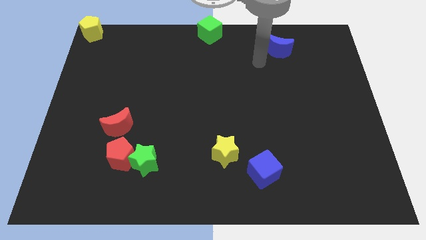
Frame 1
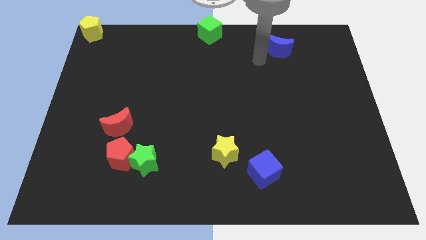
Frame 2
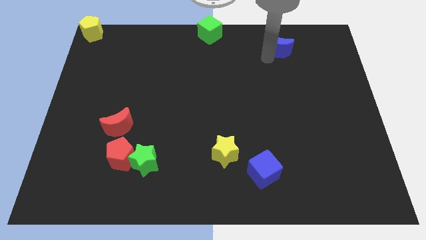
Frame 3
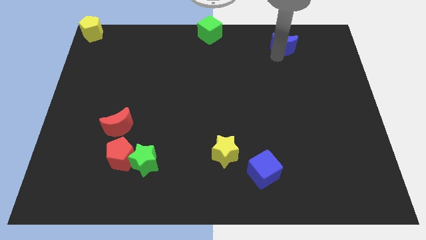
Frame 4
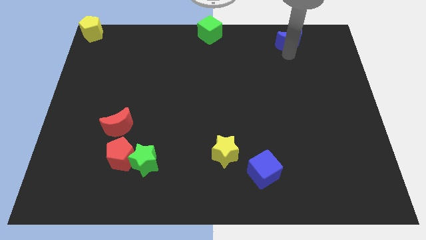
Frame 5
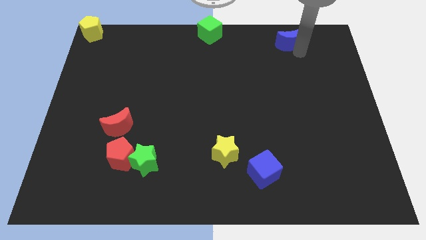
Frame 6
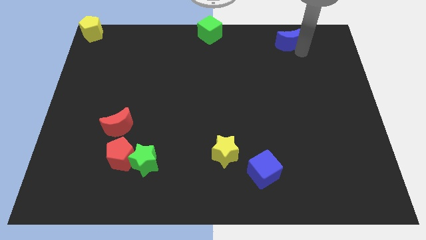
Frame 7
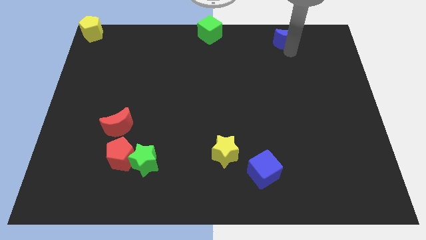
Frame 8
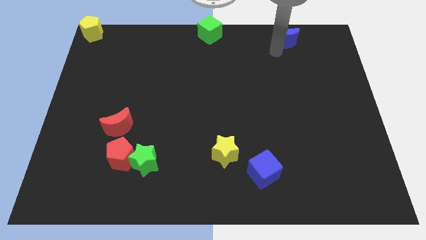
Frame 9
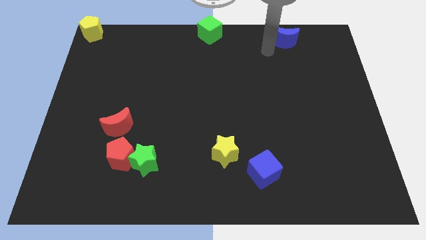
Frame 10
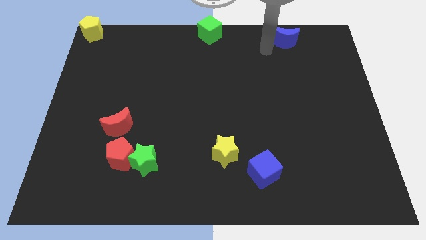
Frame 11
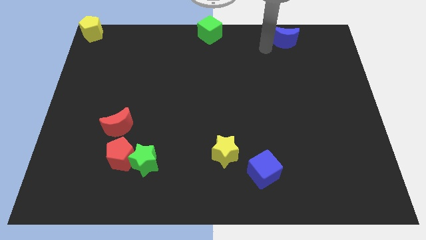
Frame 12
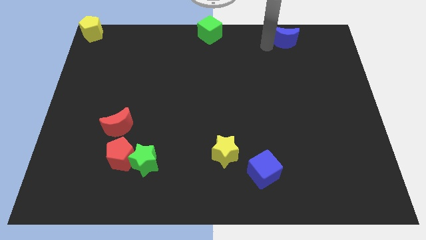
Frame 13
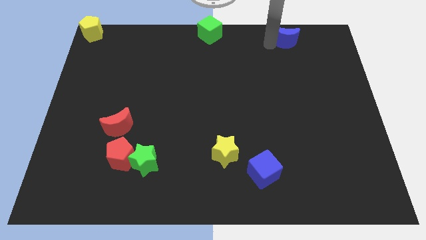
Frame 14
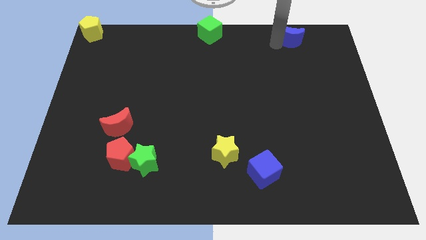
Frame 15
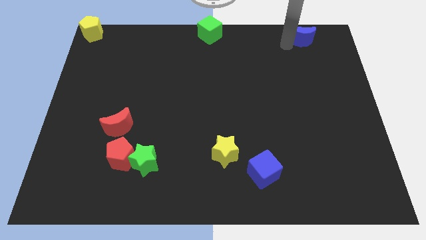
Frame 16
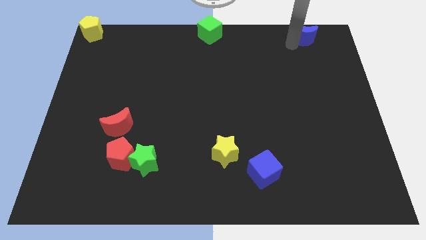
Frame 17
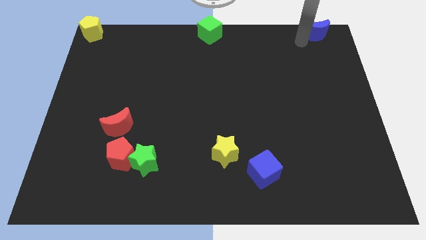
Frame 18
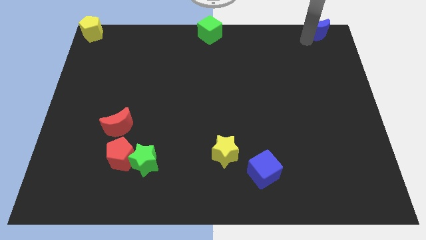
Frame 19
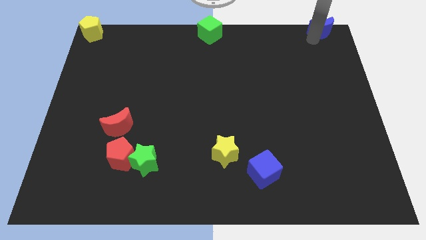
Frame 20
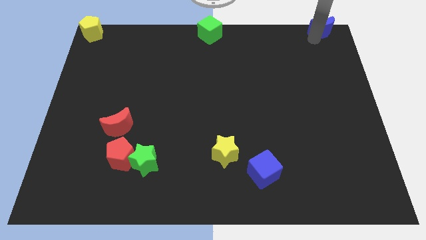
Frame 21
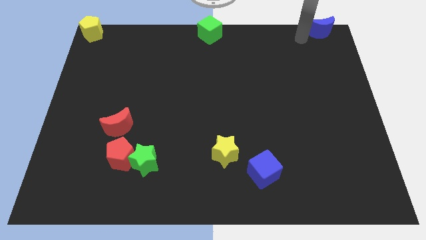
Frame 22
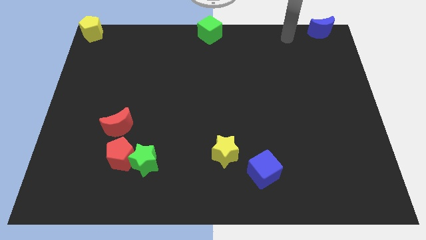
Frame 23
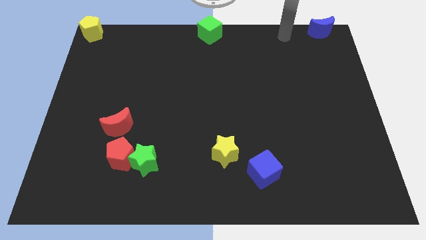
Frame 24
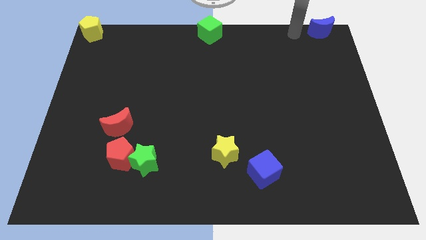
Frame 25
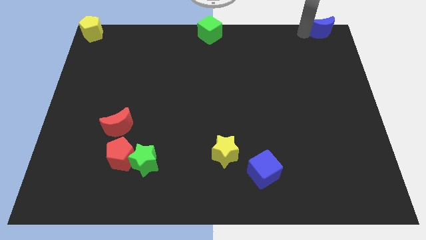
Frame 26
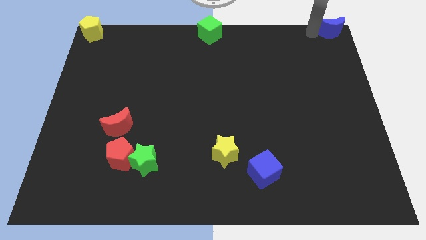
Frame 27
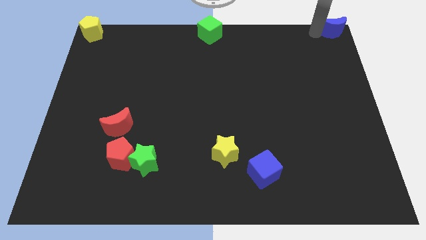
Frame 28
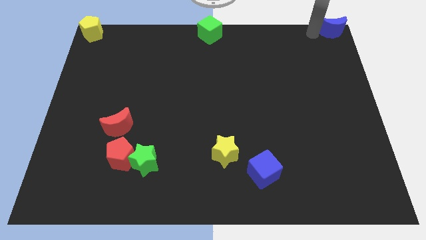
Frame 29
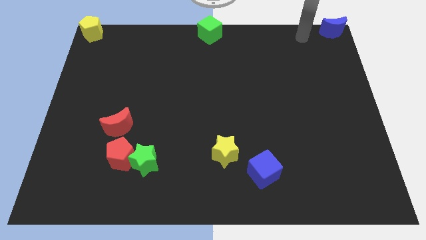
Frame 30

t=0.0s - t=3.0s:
push the blue moon to the top right corner

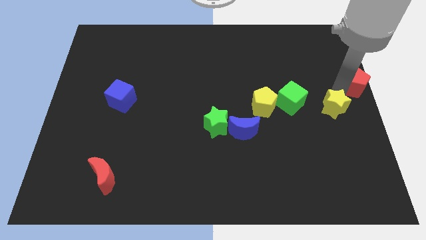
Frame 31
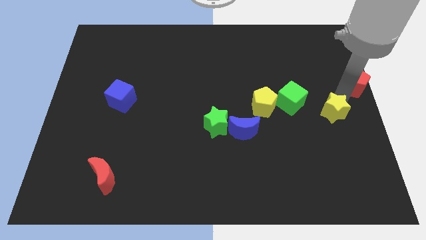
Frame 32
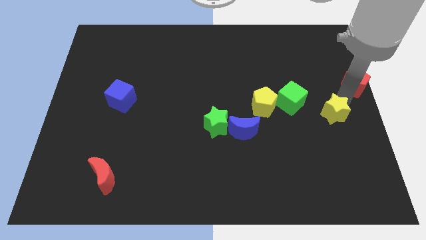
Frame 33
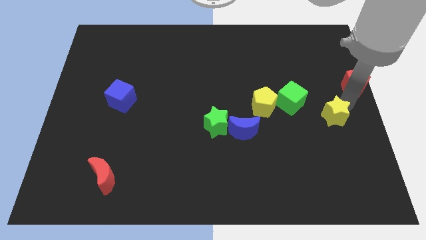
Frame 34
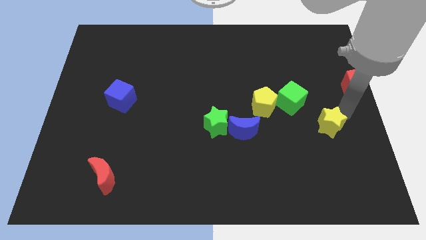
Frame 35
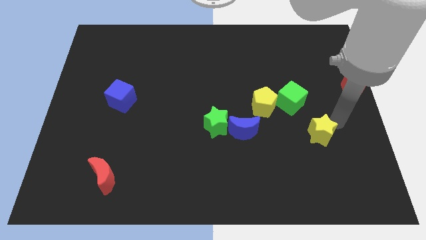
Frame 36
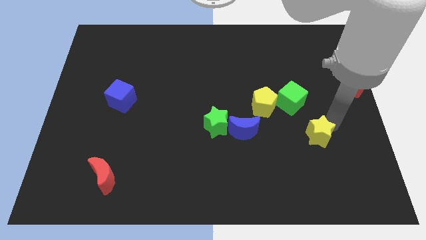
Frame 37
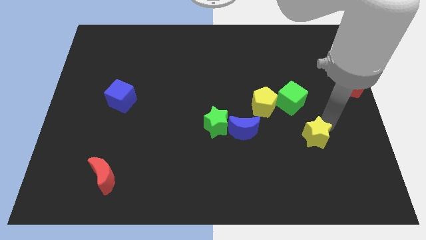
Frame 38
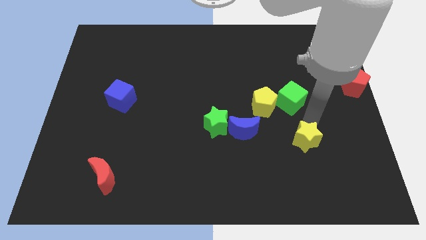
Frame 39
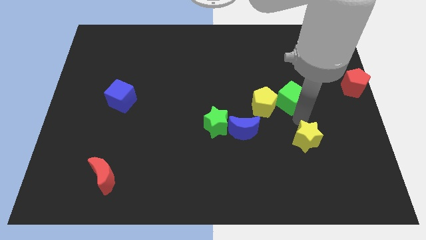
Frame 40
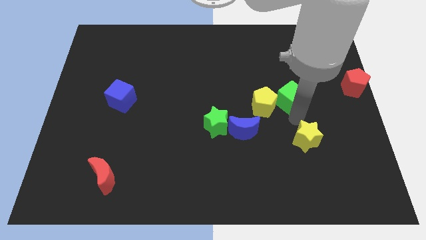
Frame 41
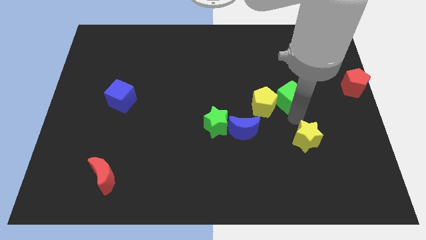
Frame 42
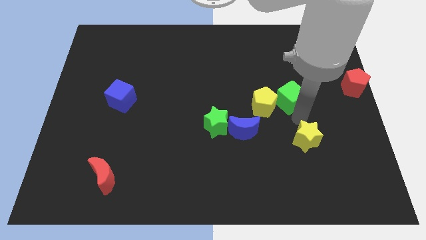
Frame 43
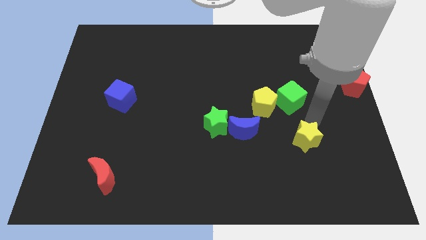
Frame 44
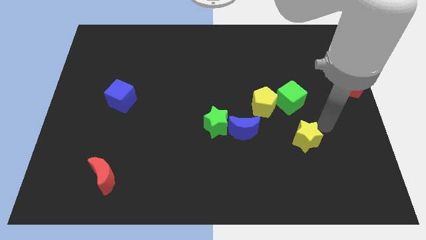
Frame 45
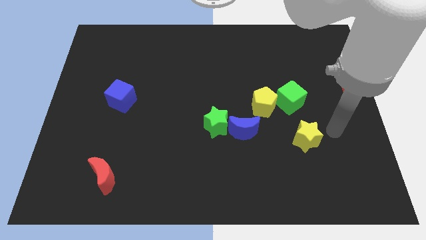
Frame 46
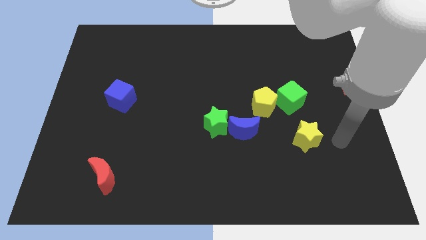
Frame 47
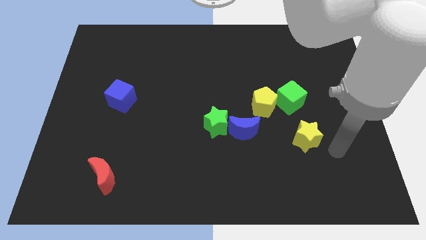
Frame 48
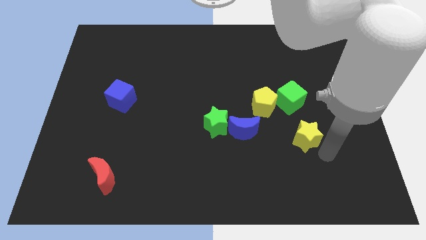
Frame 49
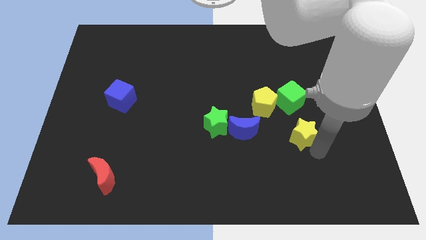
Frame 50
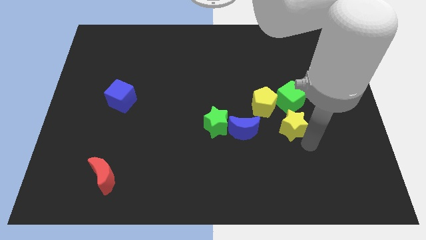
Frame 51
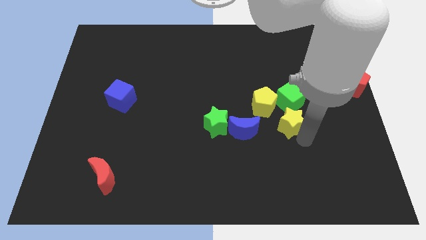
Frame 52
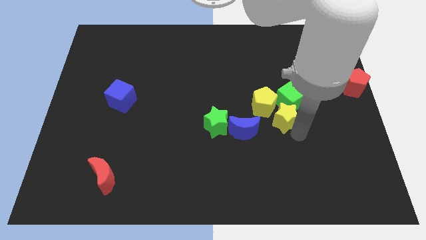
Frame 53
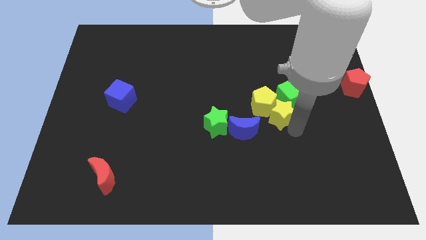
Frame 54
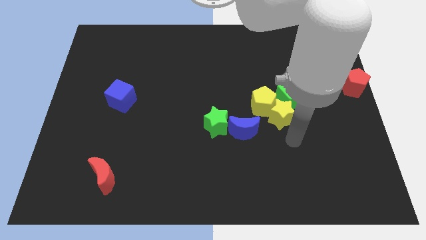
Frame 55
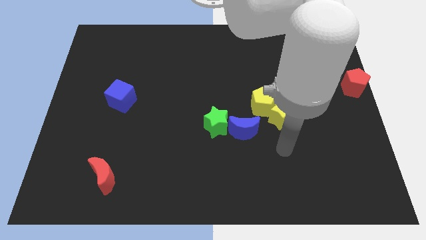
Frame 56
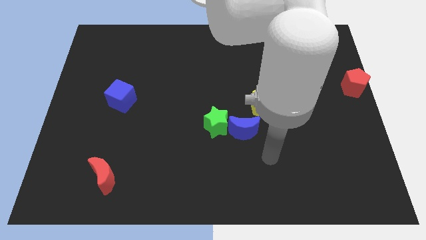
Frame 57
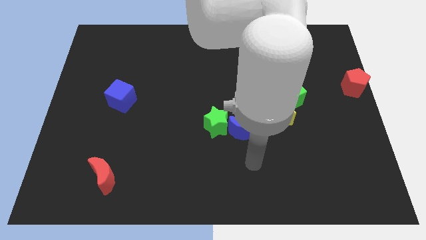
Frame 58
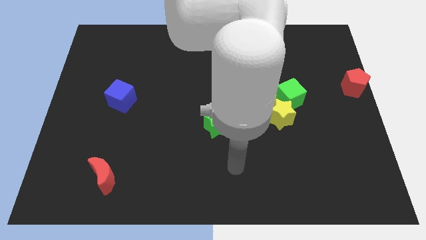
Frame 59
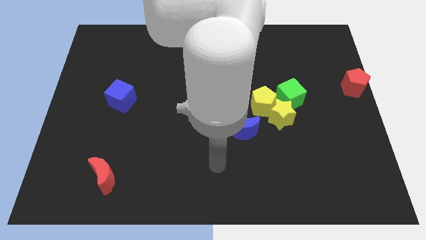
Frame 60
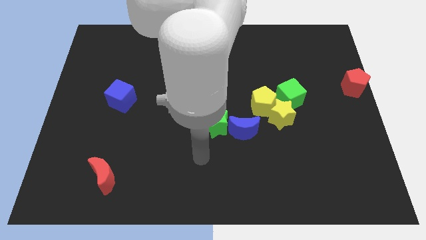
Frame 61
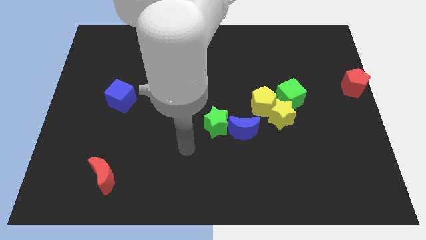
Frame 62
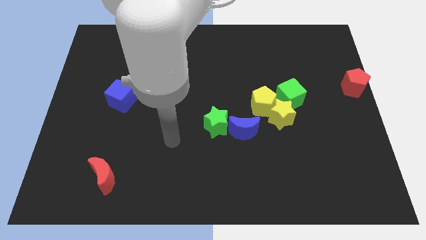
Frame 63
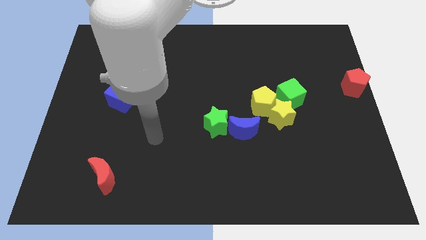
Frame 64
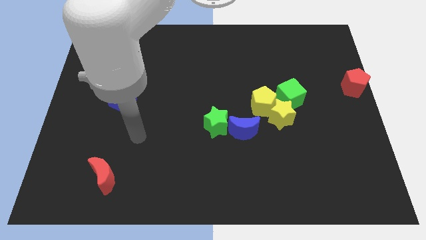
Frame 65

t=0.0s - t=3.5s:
push the yellow star into the yellow pentagon

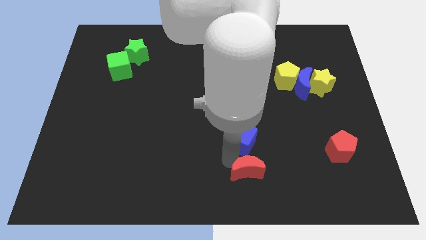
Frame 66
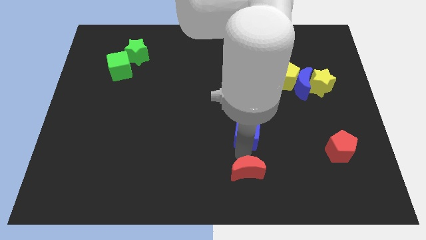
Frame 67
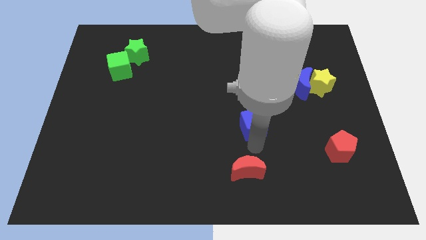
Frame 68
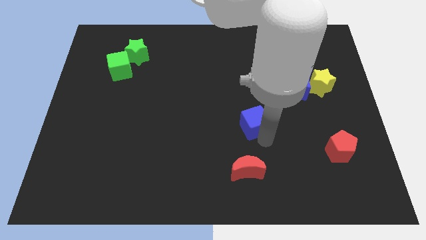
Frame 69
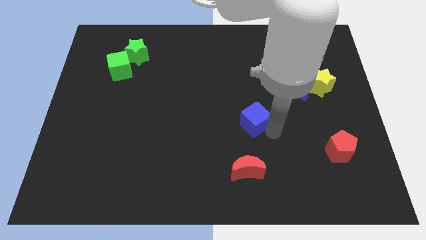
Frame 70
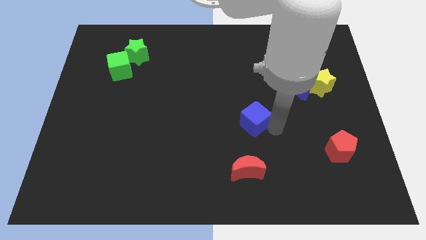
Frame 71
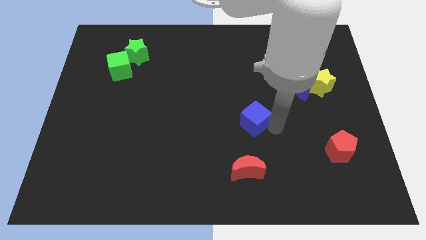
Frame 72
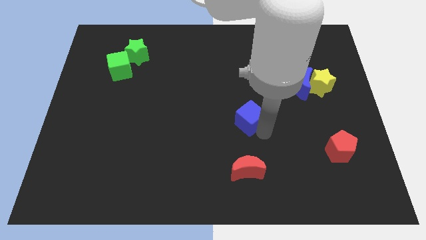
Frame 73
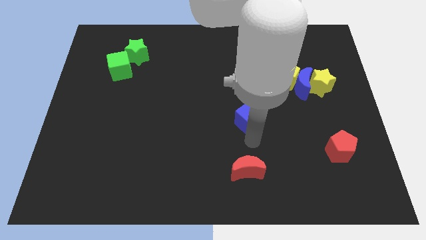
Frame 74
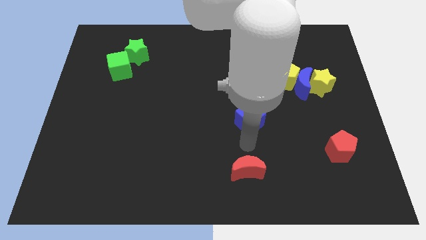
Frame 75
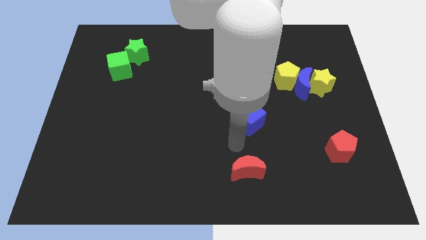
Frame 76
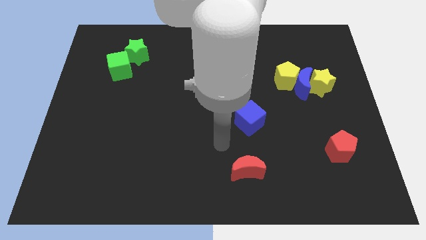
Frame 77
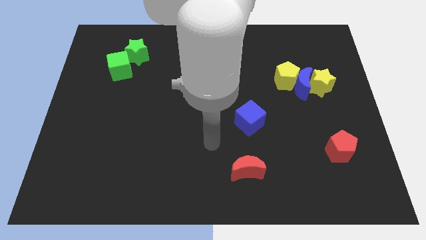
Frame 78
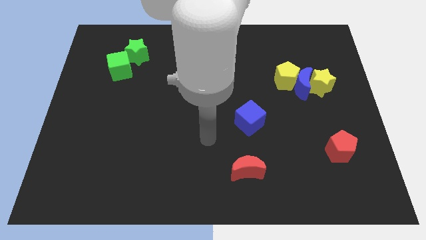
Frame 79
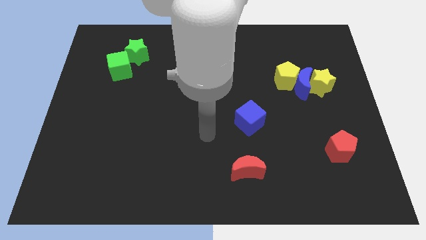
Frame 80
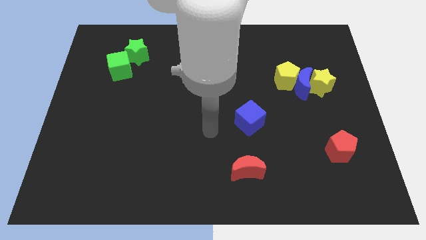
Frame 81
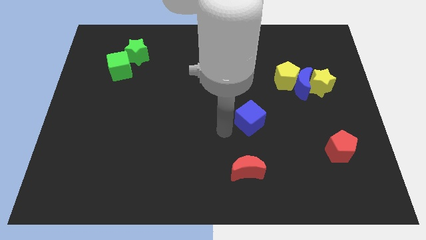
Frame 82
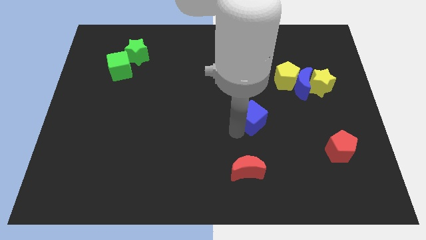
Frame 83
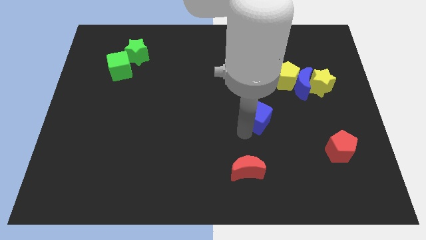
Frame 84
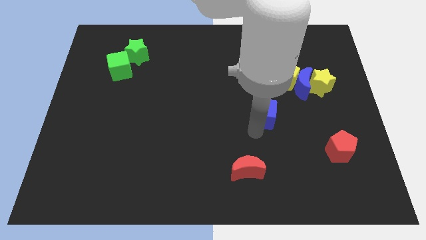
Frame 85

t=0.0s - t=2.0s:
separate the blue cube from red crescent

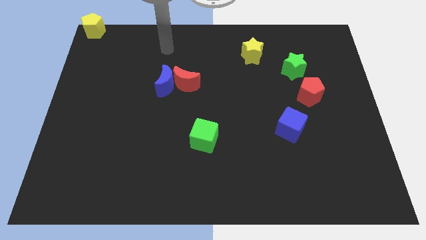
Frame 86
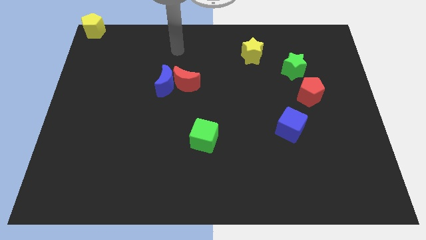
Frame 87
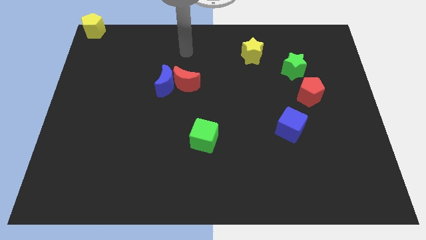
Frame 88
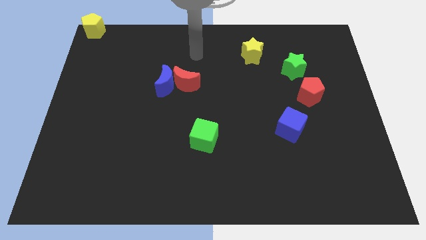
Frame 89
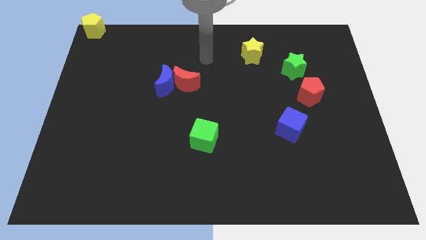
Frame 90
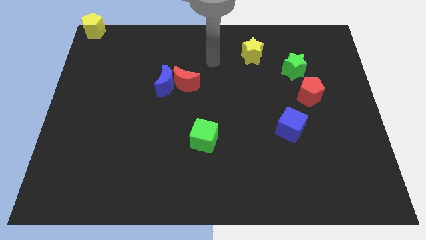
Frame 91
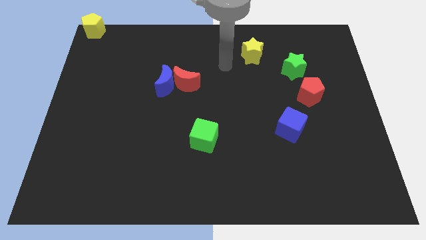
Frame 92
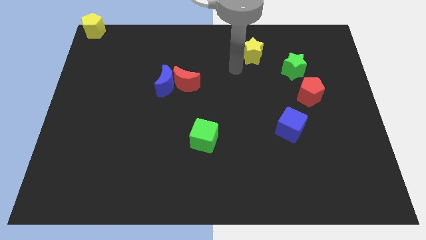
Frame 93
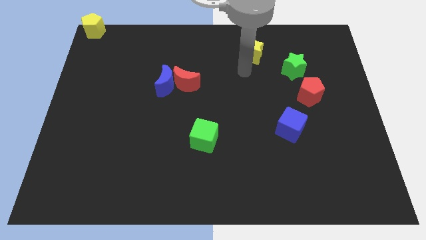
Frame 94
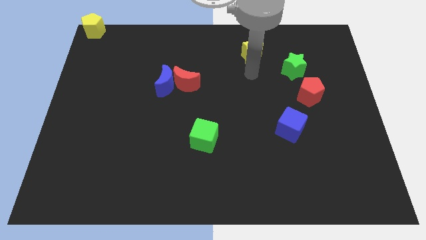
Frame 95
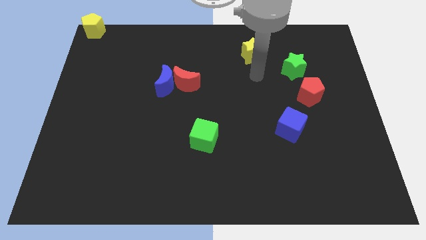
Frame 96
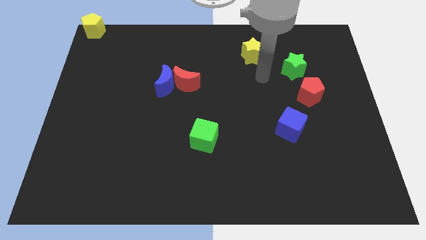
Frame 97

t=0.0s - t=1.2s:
push your arm parallel left to the green star
